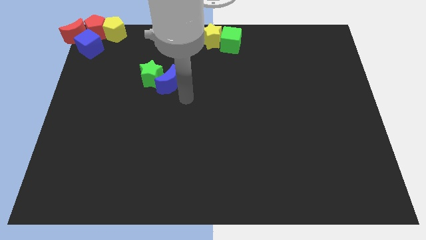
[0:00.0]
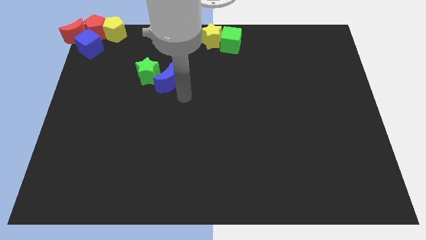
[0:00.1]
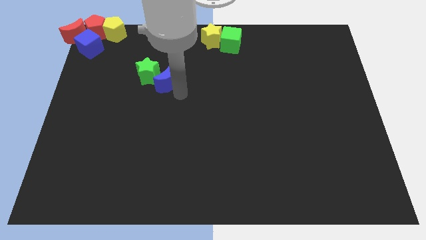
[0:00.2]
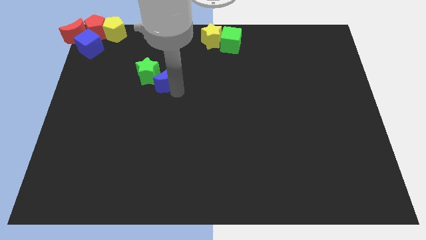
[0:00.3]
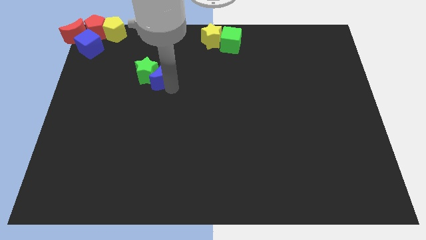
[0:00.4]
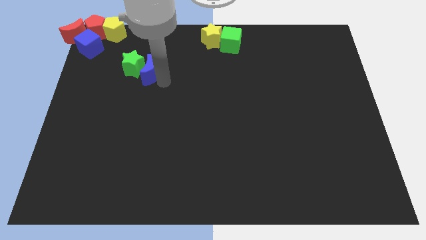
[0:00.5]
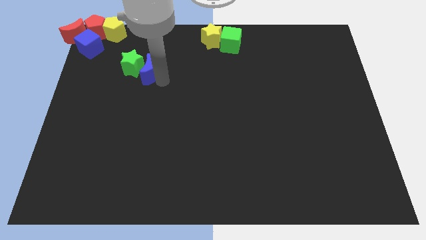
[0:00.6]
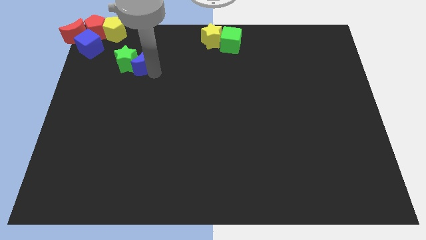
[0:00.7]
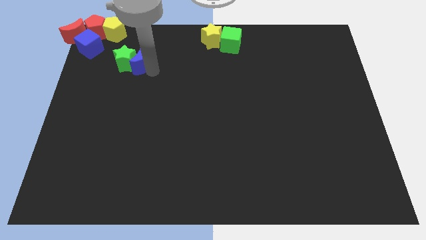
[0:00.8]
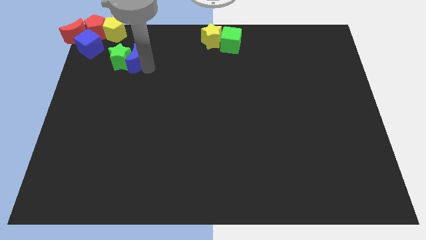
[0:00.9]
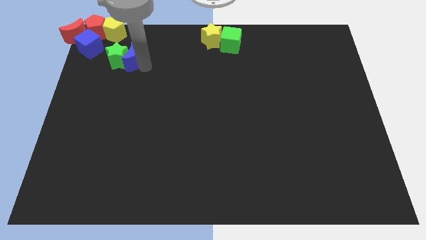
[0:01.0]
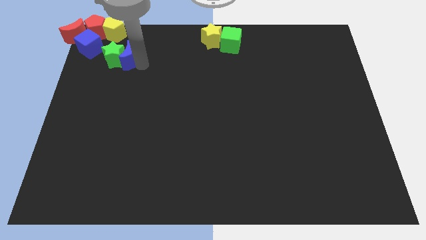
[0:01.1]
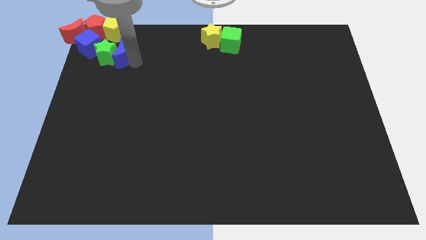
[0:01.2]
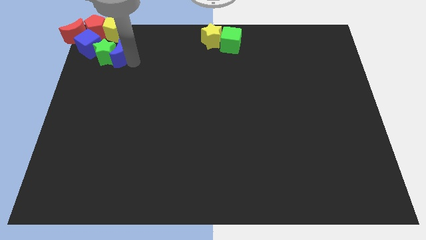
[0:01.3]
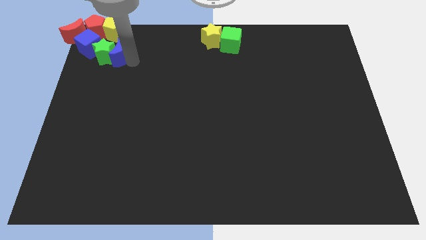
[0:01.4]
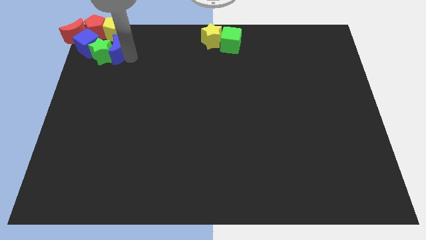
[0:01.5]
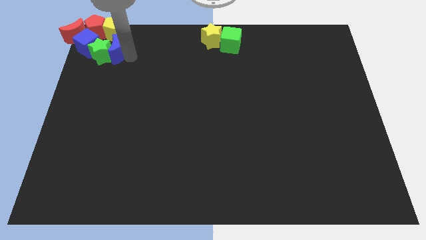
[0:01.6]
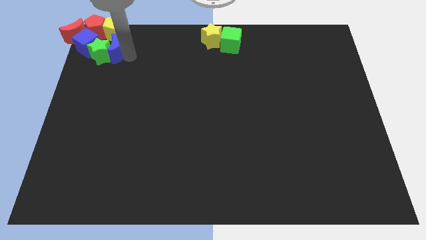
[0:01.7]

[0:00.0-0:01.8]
push the green star and blue moon into the blue cube

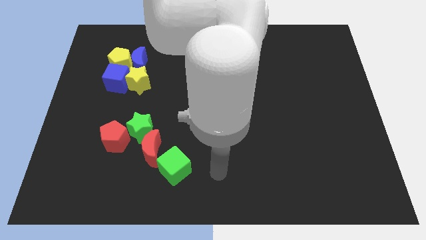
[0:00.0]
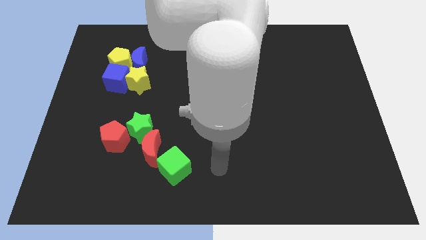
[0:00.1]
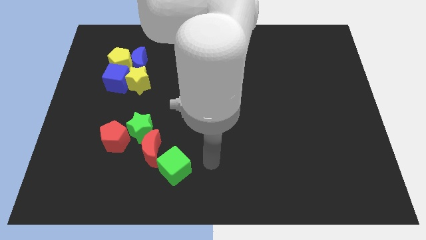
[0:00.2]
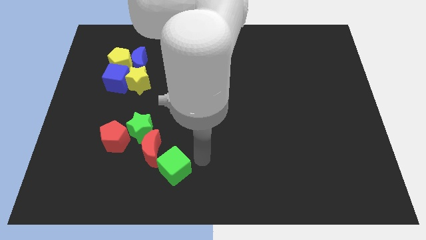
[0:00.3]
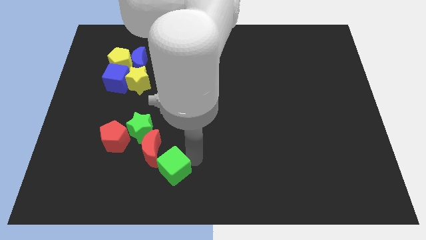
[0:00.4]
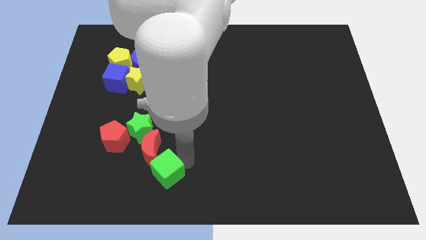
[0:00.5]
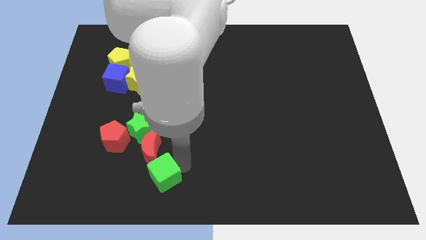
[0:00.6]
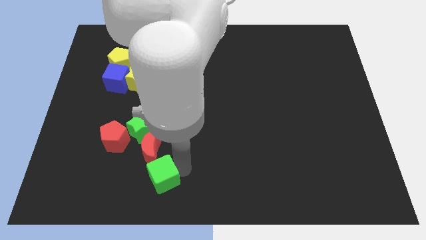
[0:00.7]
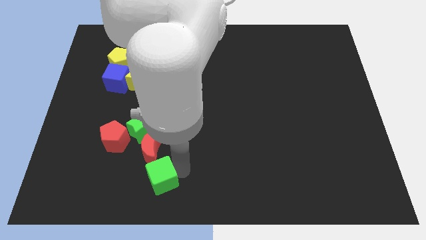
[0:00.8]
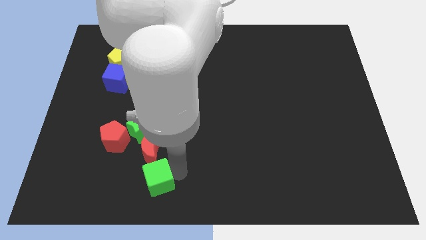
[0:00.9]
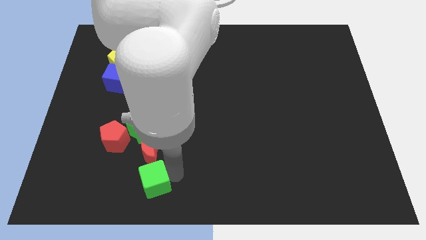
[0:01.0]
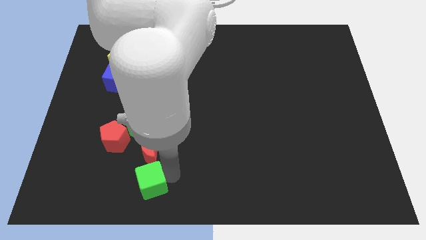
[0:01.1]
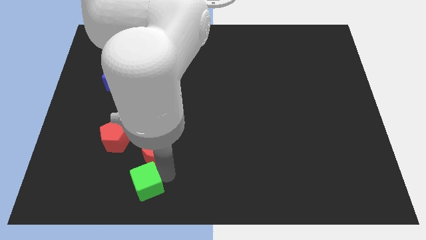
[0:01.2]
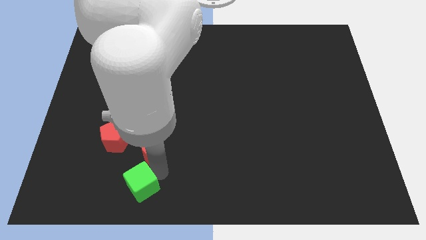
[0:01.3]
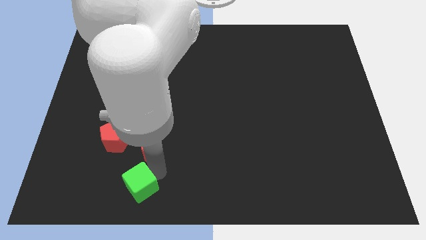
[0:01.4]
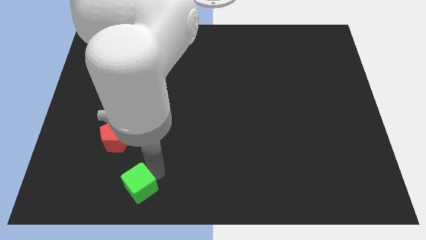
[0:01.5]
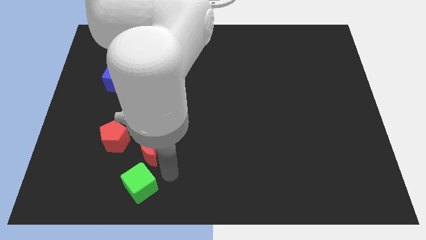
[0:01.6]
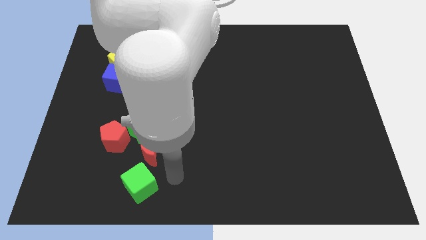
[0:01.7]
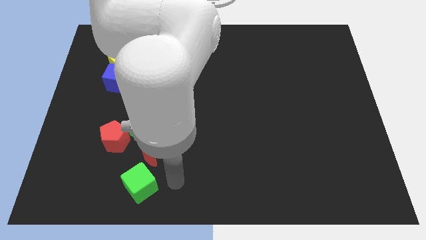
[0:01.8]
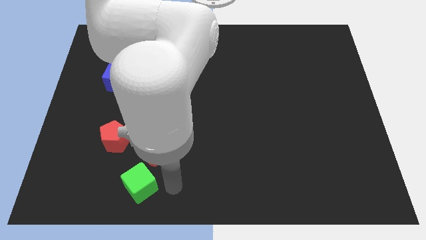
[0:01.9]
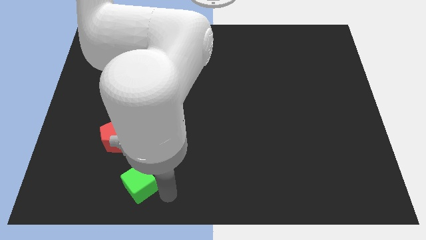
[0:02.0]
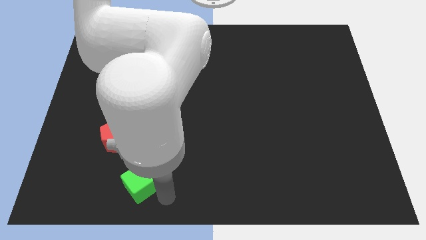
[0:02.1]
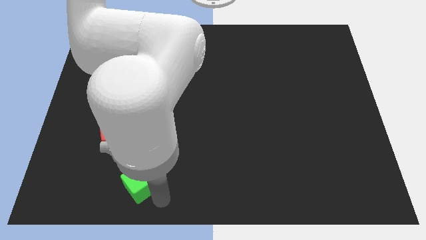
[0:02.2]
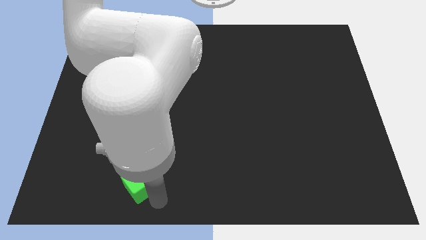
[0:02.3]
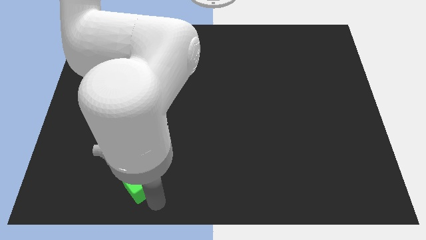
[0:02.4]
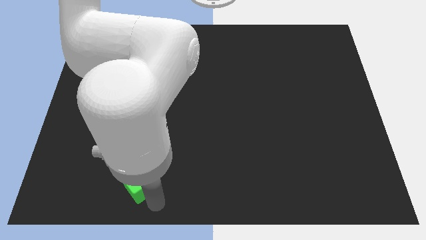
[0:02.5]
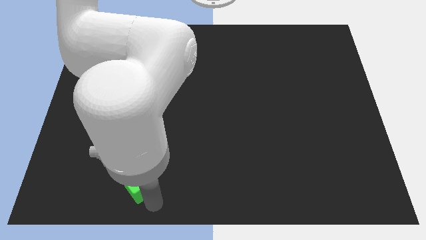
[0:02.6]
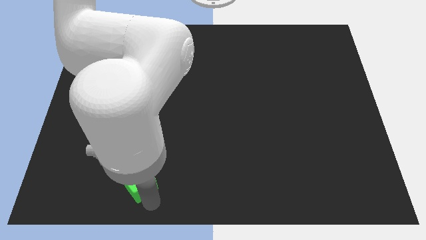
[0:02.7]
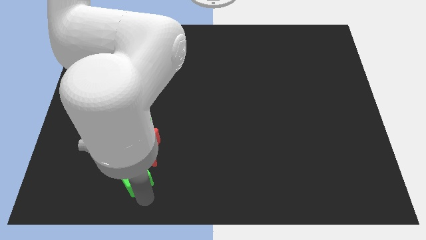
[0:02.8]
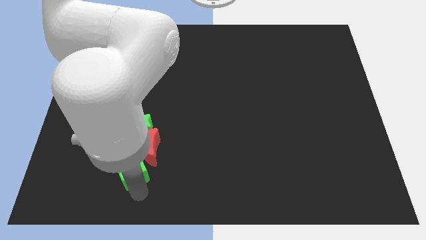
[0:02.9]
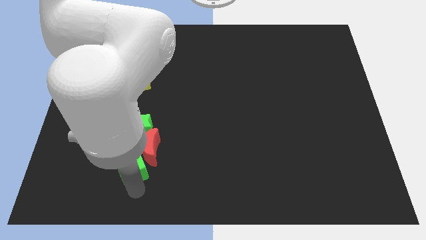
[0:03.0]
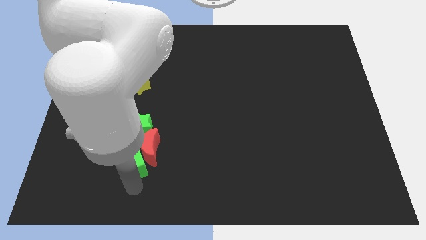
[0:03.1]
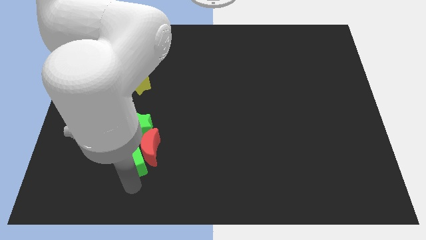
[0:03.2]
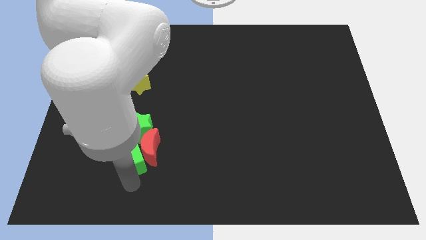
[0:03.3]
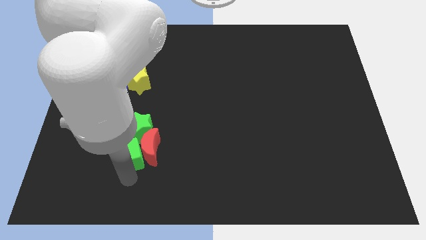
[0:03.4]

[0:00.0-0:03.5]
place the green cube left of red crescent

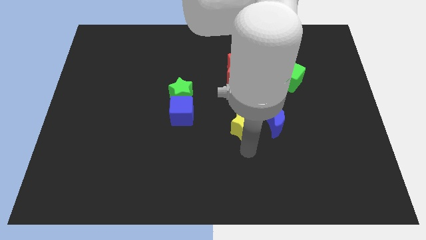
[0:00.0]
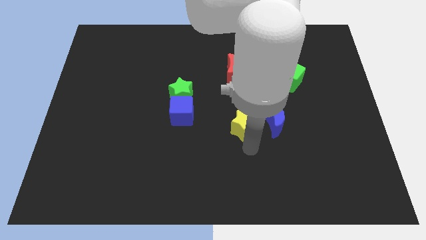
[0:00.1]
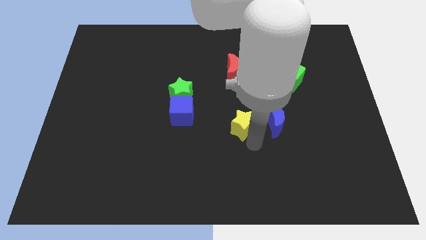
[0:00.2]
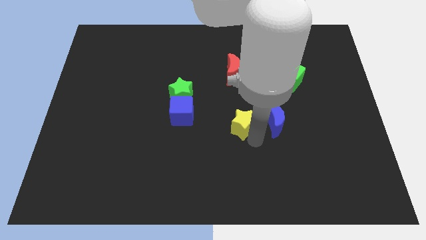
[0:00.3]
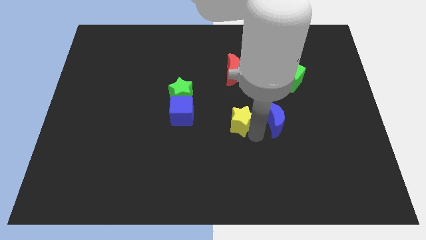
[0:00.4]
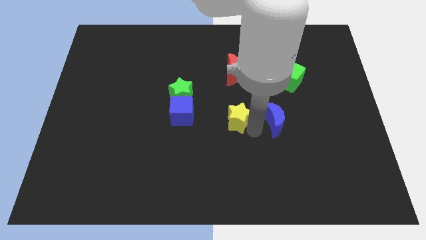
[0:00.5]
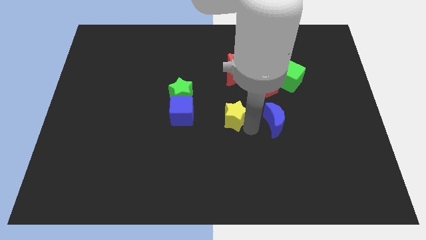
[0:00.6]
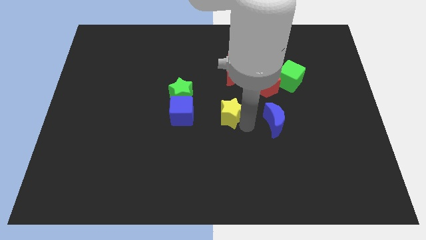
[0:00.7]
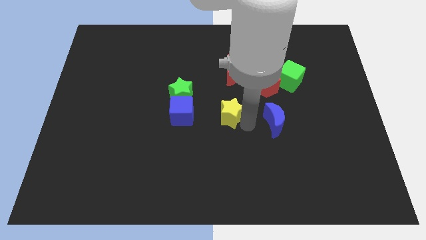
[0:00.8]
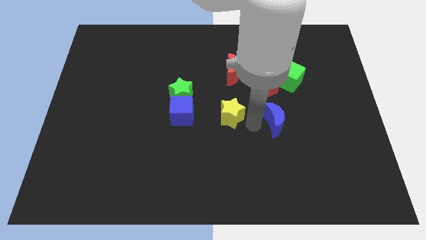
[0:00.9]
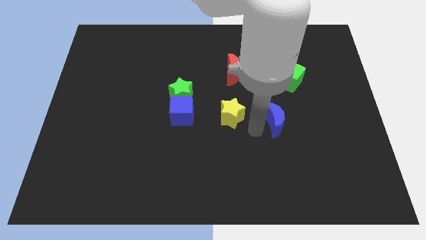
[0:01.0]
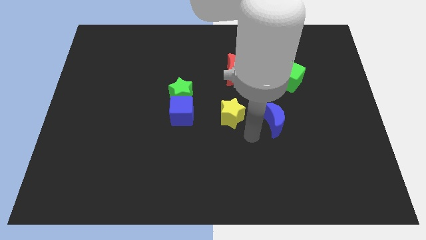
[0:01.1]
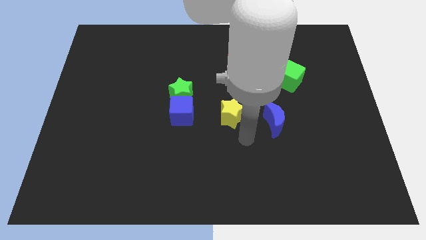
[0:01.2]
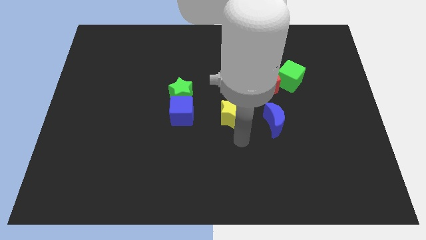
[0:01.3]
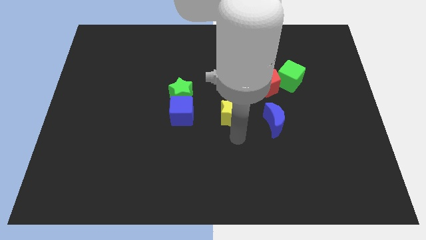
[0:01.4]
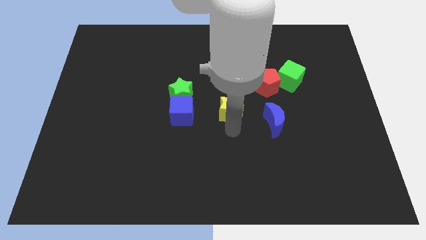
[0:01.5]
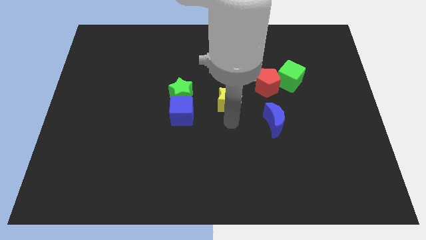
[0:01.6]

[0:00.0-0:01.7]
move the yellow star to the top of the board

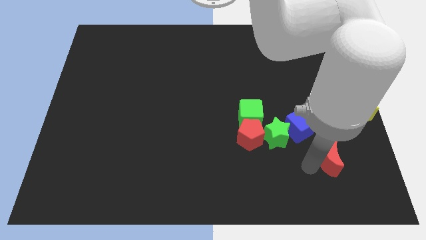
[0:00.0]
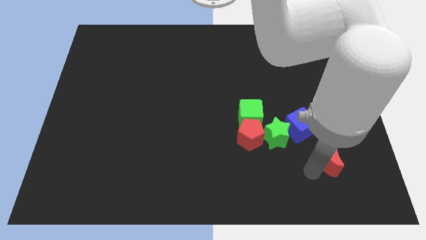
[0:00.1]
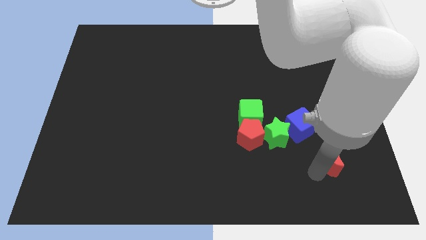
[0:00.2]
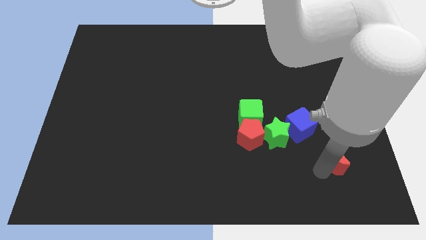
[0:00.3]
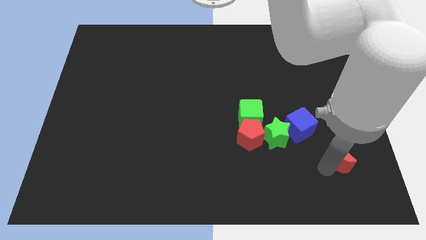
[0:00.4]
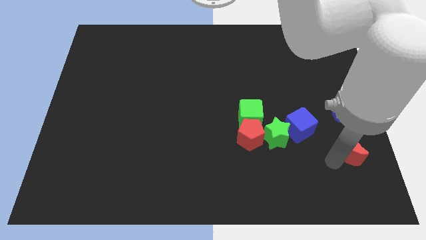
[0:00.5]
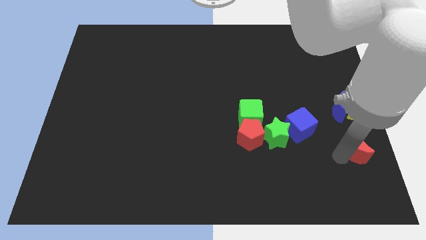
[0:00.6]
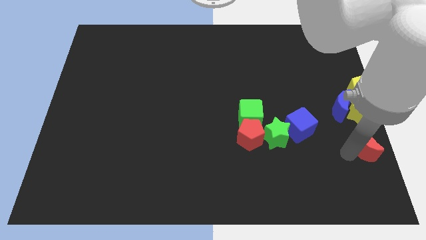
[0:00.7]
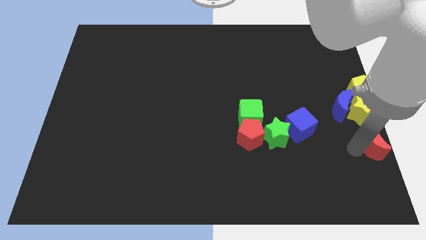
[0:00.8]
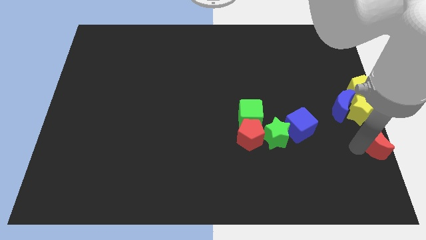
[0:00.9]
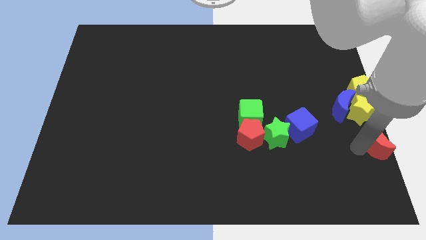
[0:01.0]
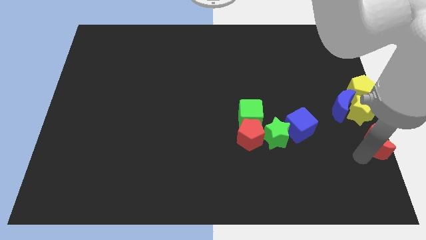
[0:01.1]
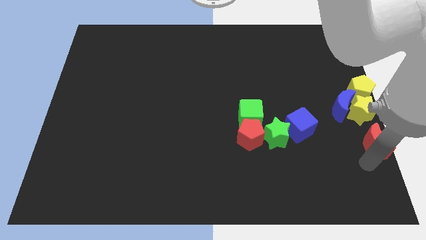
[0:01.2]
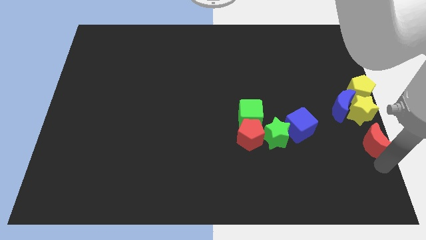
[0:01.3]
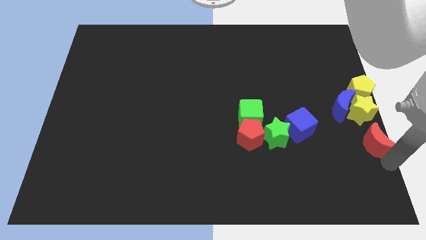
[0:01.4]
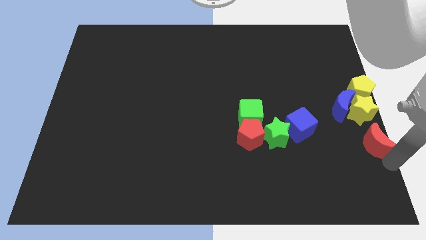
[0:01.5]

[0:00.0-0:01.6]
move the red moon down to the yellow star

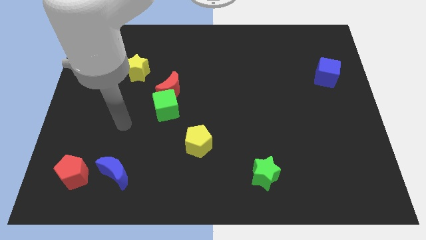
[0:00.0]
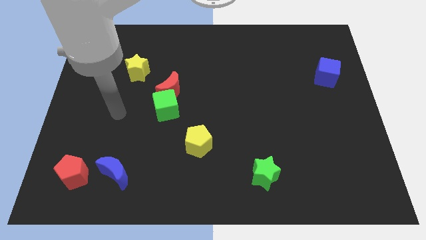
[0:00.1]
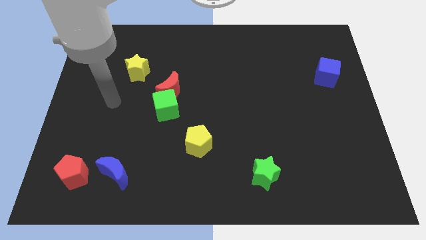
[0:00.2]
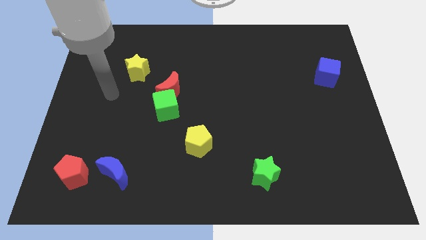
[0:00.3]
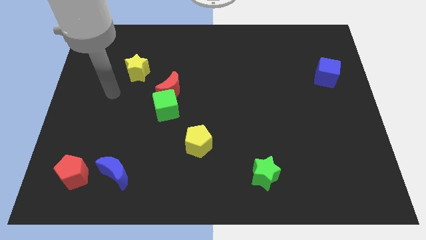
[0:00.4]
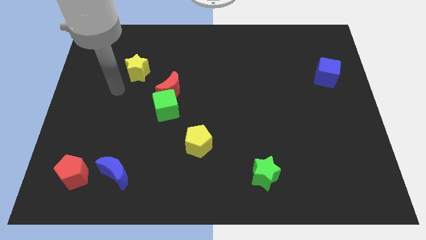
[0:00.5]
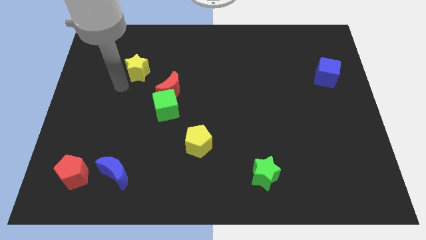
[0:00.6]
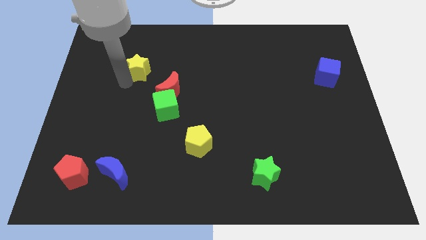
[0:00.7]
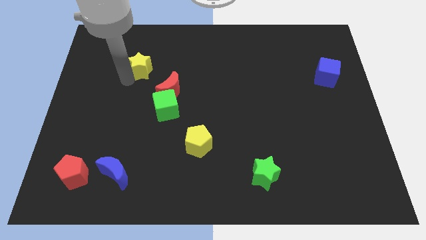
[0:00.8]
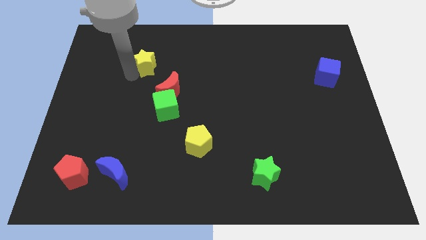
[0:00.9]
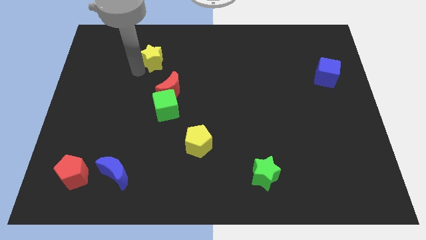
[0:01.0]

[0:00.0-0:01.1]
push the yellow star upwards
